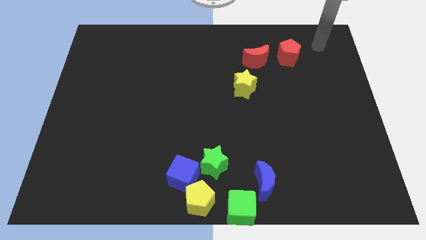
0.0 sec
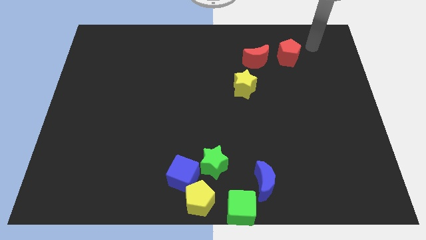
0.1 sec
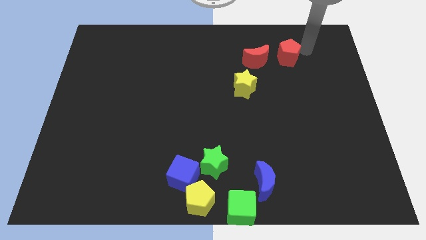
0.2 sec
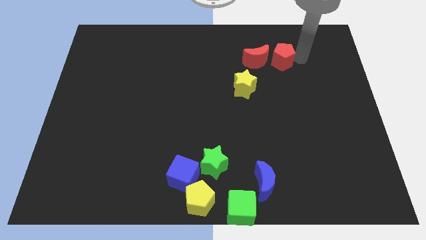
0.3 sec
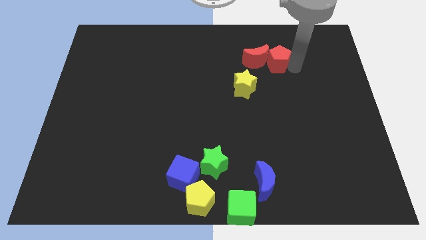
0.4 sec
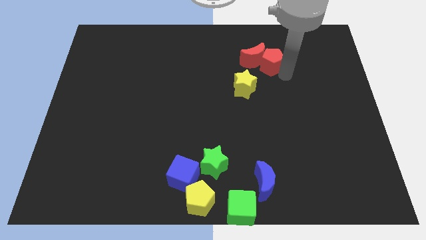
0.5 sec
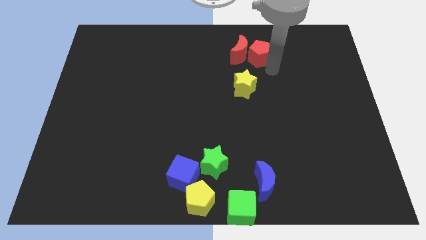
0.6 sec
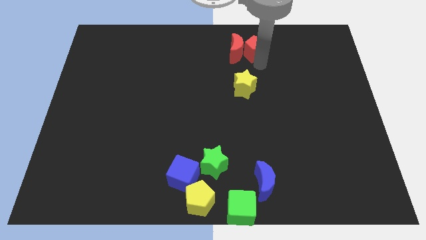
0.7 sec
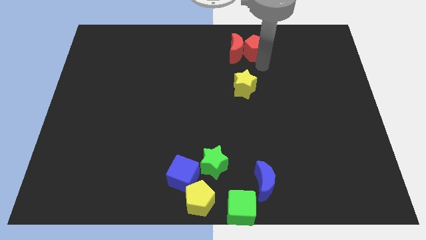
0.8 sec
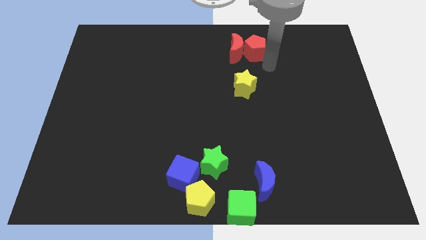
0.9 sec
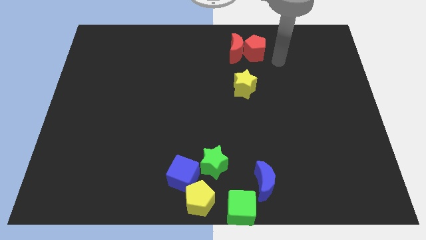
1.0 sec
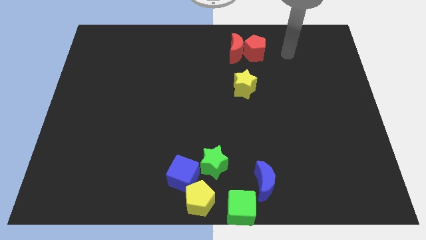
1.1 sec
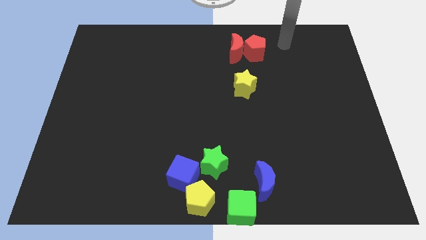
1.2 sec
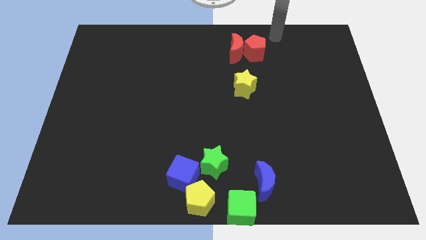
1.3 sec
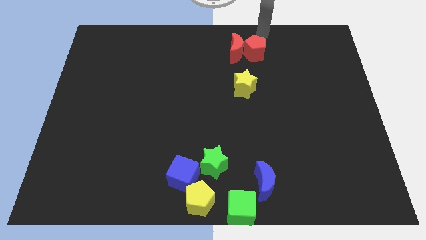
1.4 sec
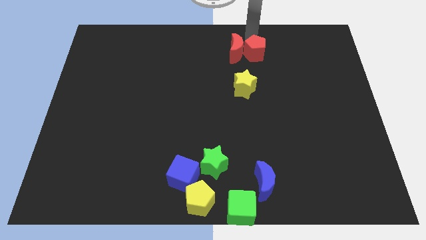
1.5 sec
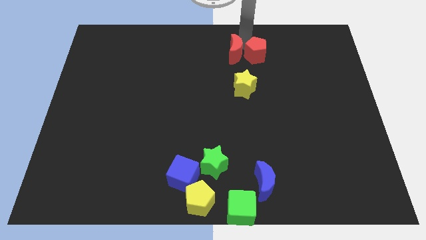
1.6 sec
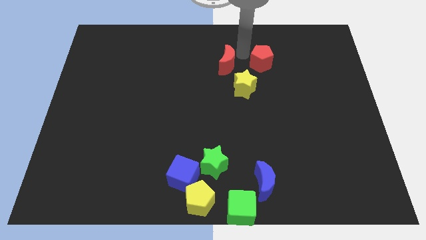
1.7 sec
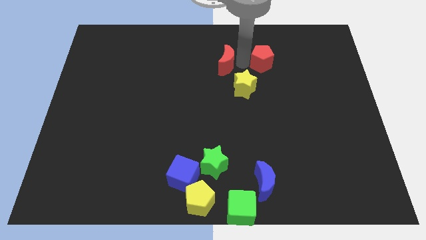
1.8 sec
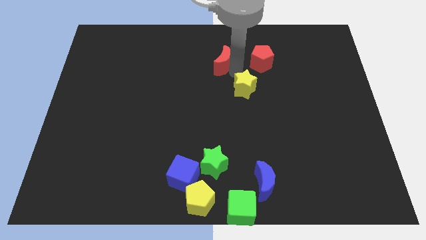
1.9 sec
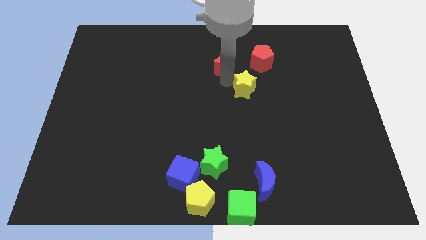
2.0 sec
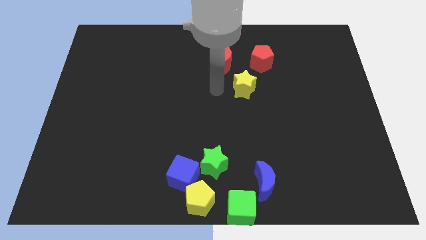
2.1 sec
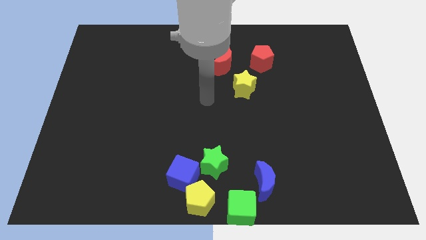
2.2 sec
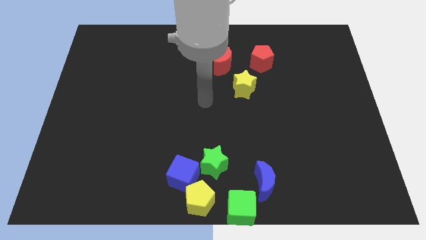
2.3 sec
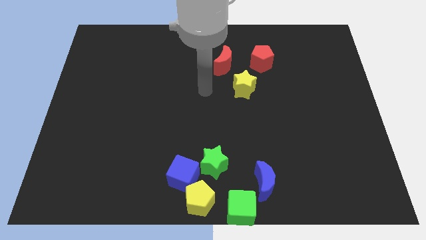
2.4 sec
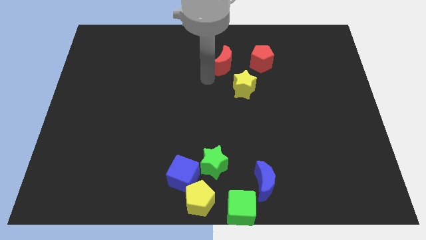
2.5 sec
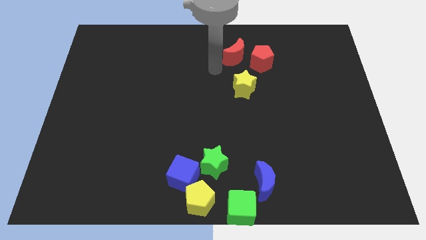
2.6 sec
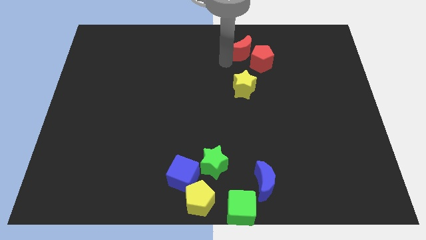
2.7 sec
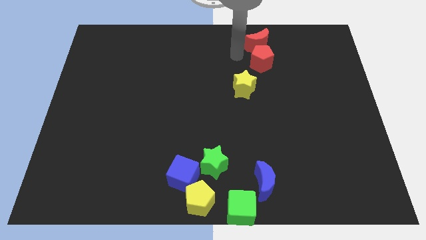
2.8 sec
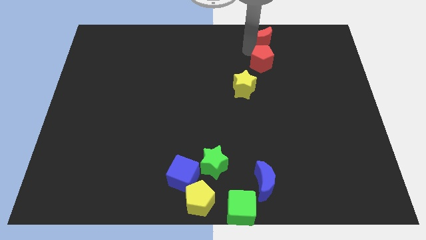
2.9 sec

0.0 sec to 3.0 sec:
push the red pentagon into the red moon

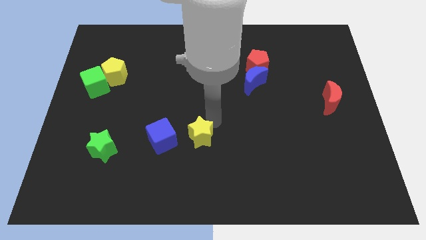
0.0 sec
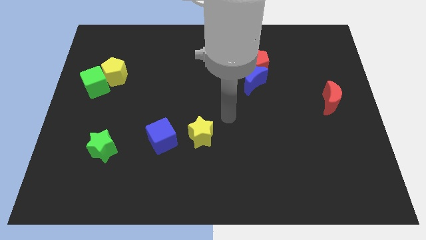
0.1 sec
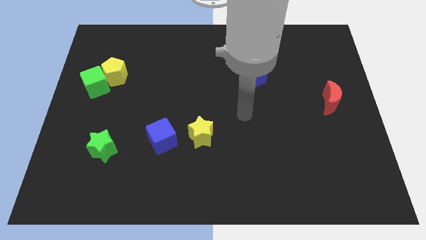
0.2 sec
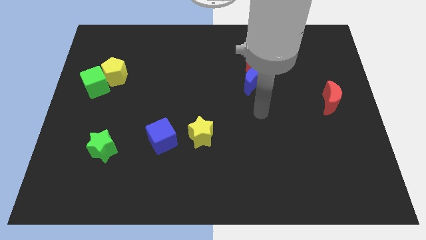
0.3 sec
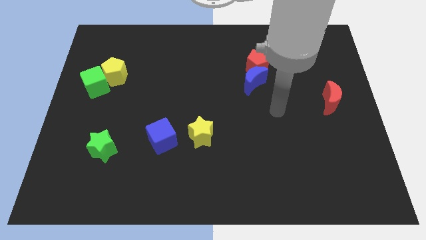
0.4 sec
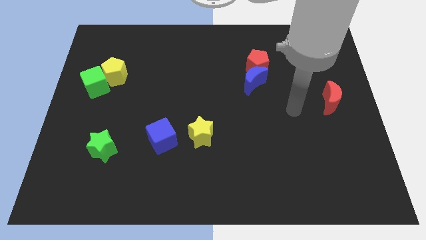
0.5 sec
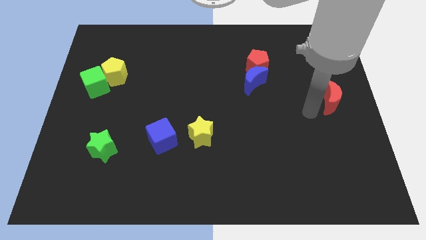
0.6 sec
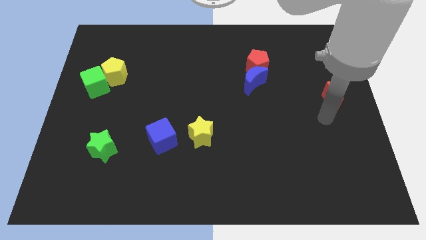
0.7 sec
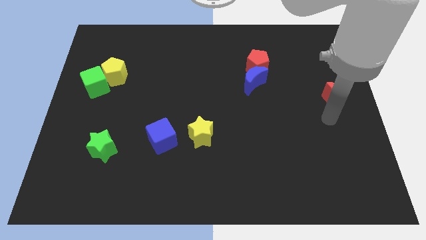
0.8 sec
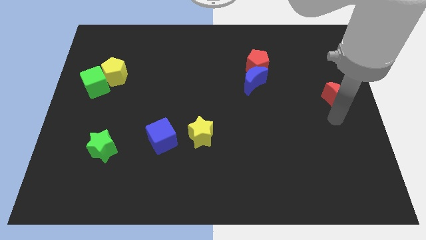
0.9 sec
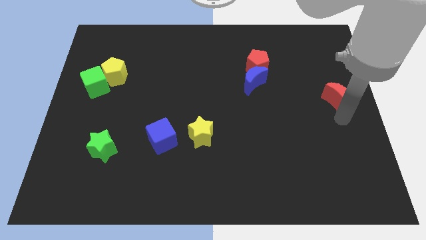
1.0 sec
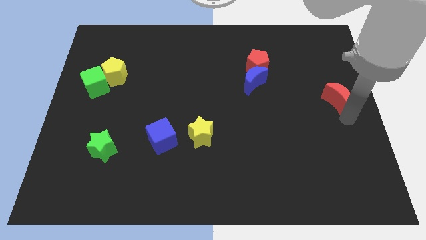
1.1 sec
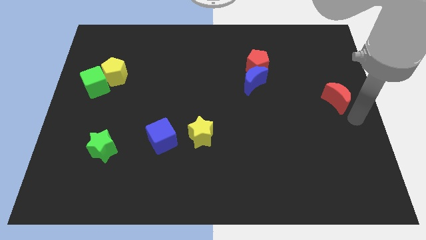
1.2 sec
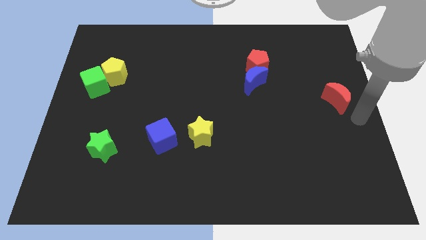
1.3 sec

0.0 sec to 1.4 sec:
slightly push the red moon to the right side

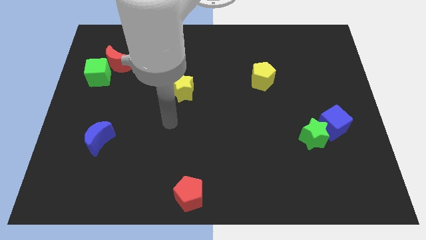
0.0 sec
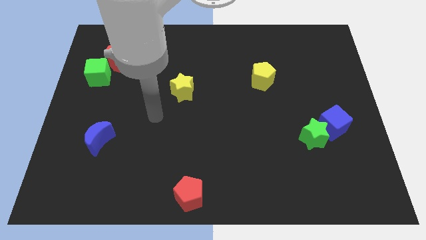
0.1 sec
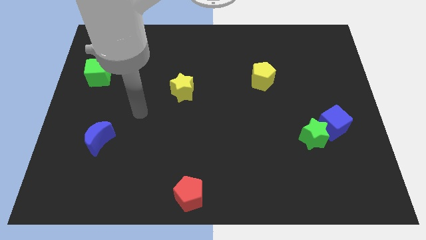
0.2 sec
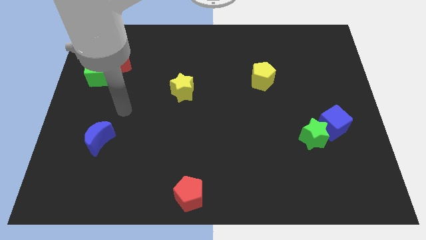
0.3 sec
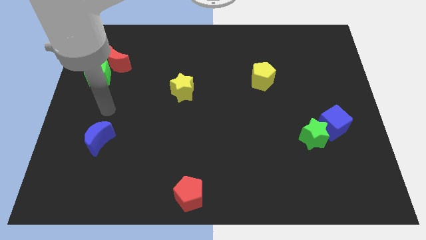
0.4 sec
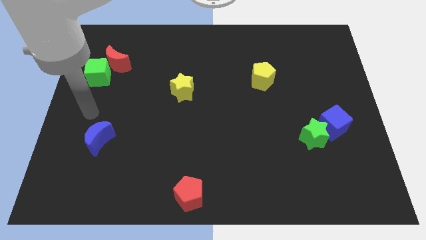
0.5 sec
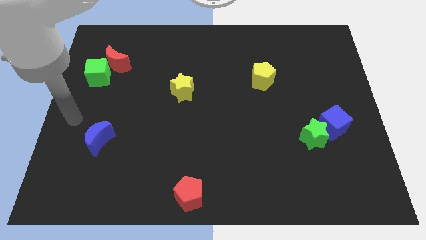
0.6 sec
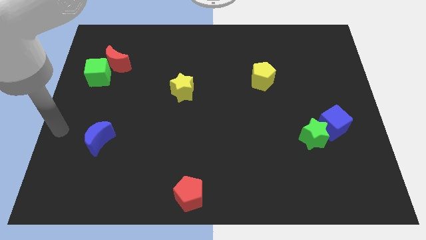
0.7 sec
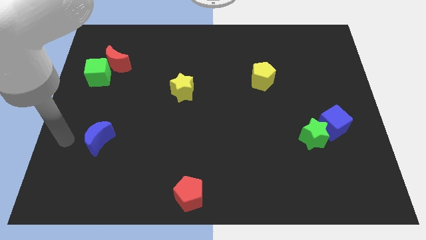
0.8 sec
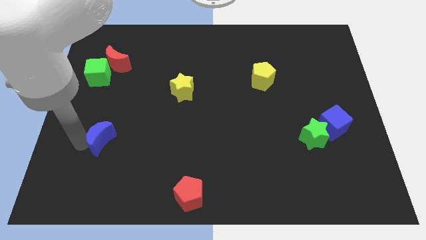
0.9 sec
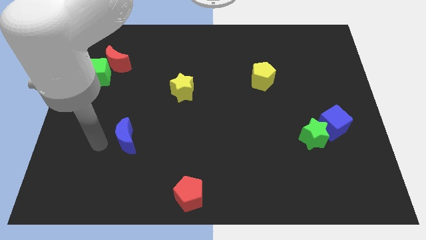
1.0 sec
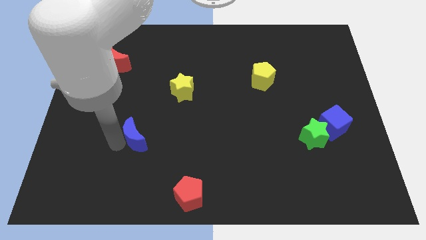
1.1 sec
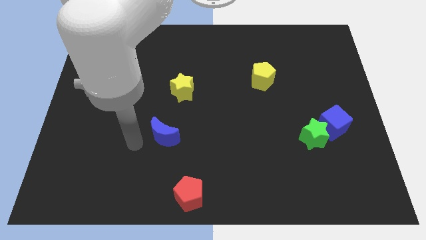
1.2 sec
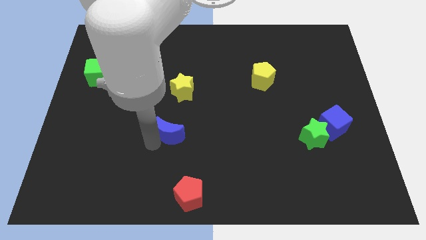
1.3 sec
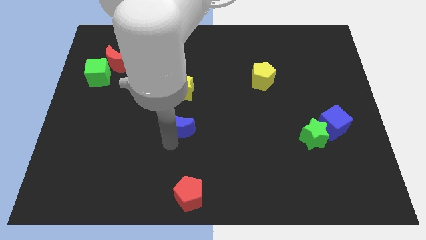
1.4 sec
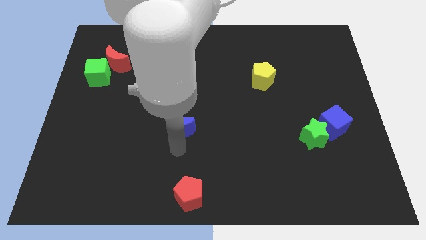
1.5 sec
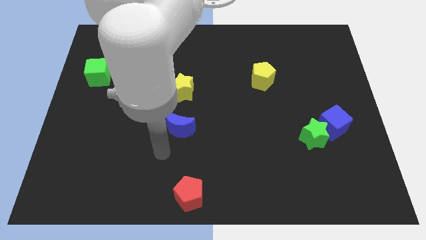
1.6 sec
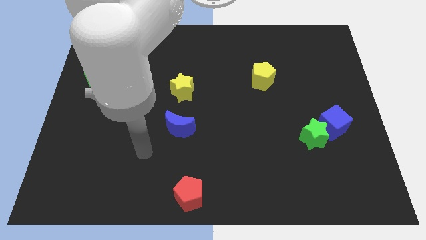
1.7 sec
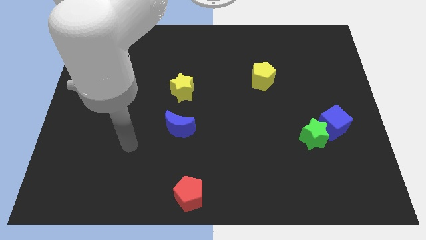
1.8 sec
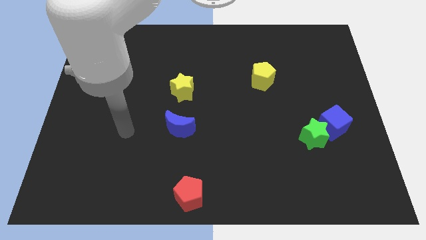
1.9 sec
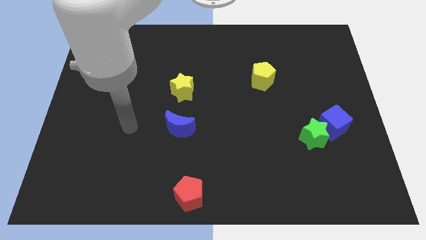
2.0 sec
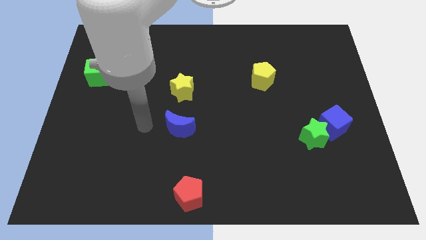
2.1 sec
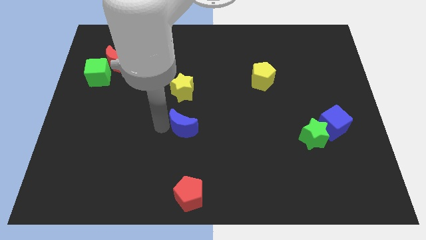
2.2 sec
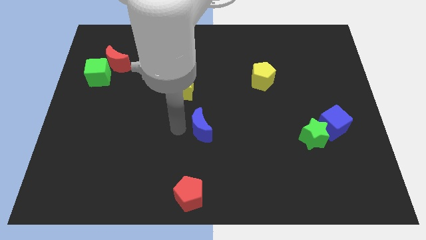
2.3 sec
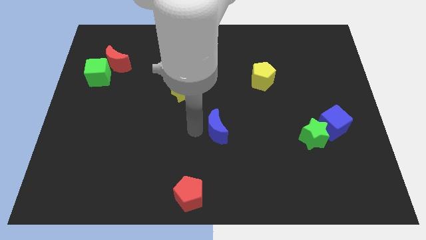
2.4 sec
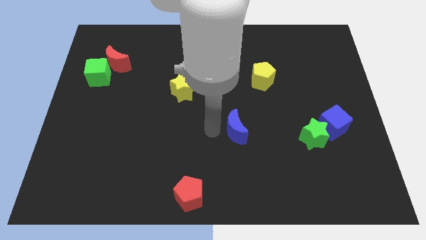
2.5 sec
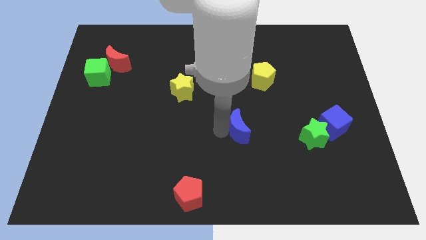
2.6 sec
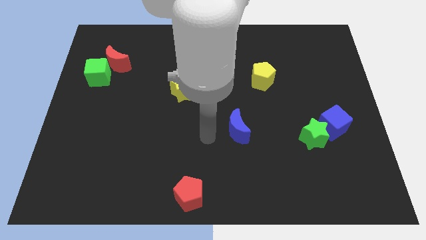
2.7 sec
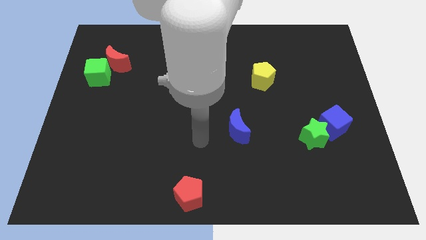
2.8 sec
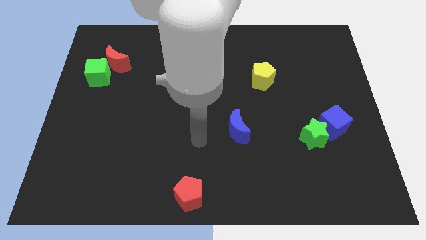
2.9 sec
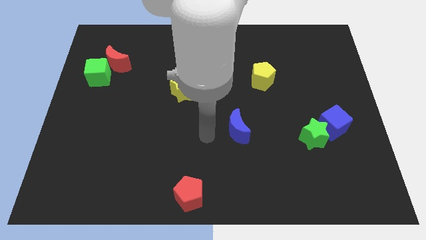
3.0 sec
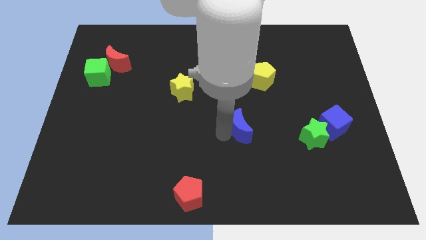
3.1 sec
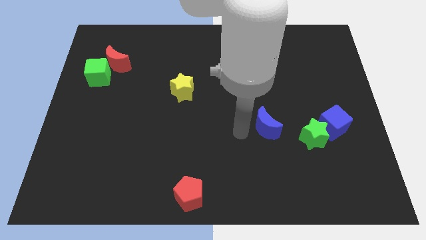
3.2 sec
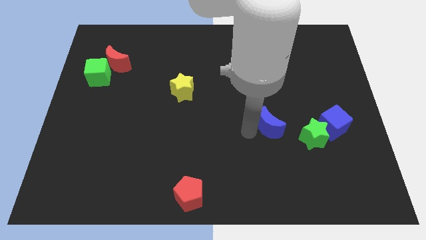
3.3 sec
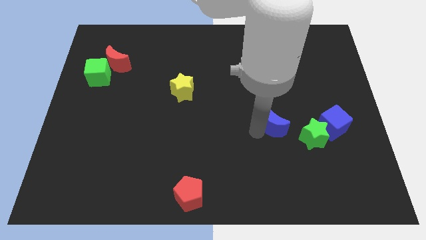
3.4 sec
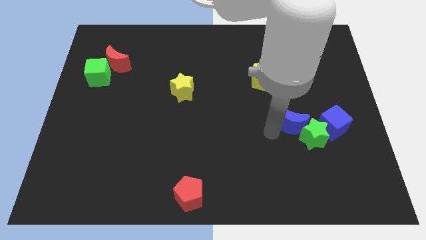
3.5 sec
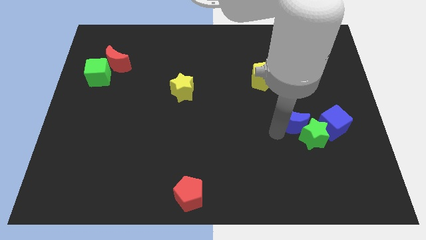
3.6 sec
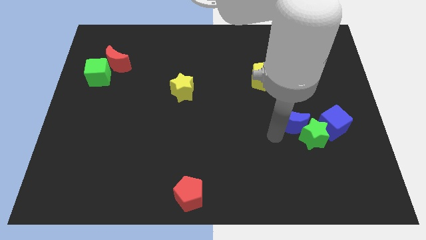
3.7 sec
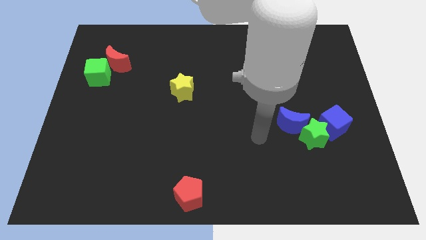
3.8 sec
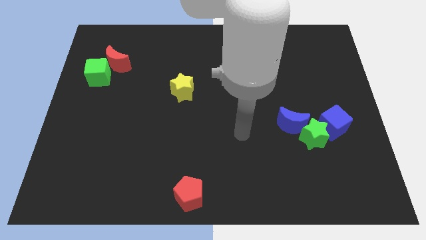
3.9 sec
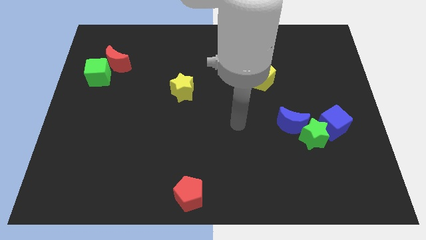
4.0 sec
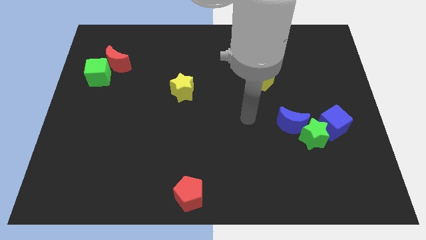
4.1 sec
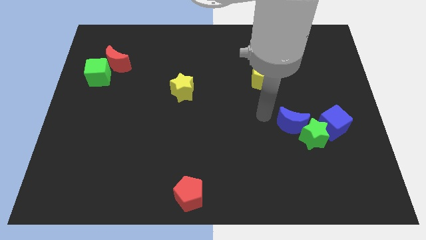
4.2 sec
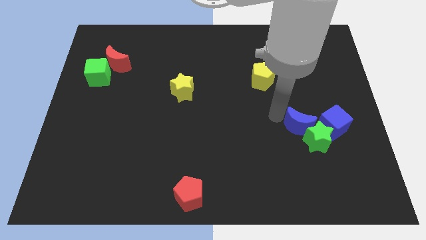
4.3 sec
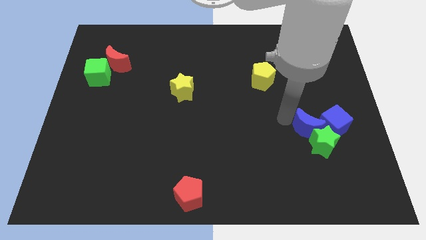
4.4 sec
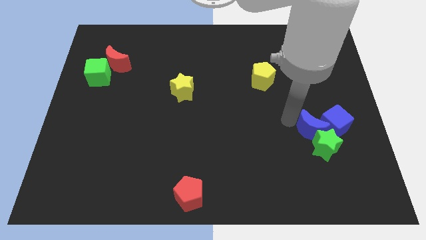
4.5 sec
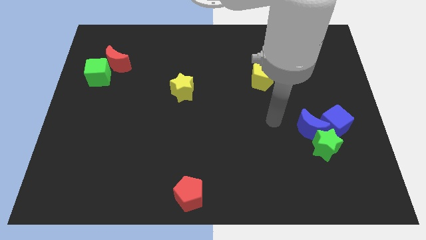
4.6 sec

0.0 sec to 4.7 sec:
move the blue crescent into the group of blocks
